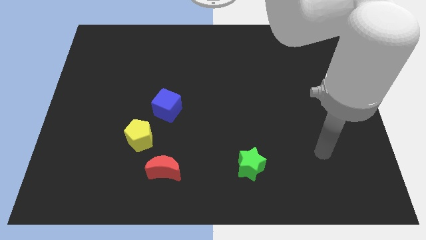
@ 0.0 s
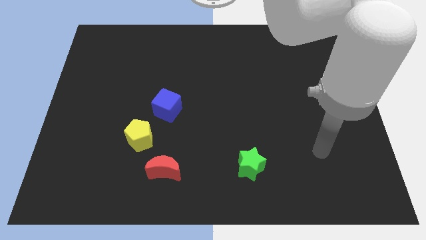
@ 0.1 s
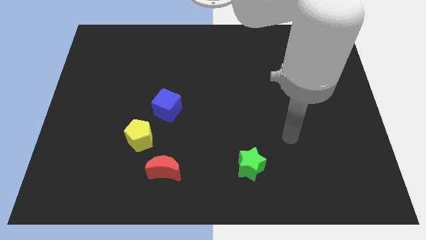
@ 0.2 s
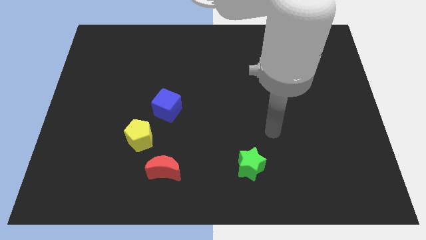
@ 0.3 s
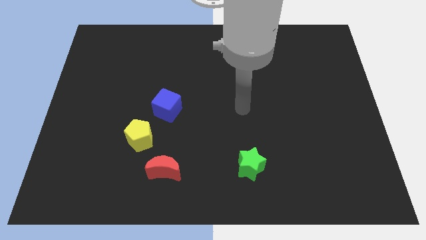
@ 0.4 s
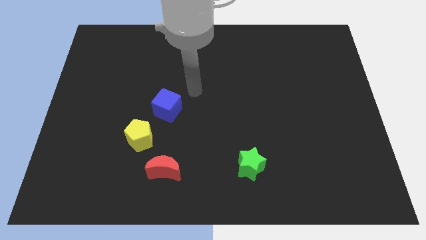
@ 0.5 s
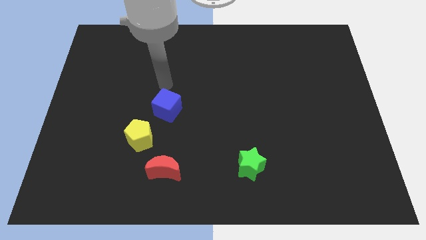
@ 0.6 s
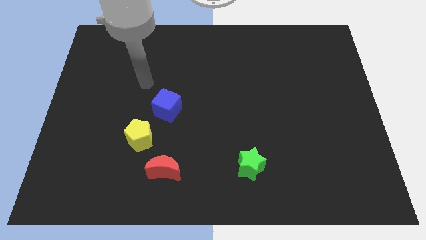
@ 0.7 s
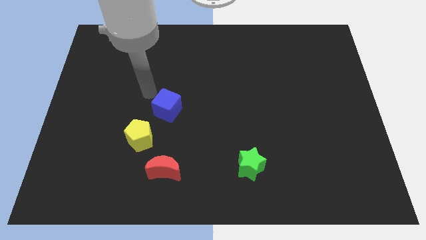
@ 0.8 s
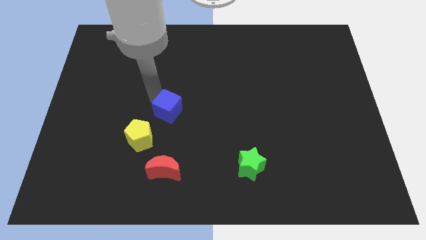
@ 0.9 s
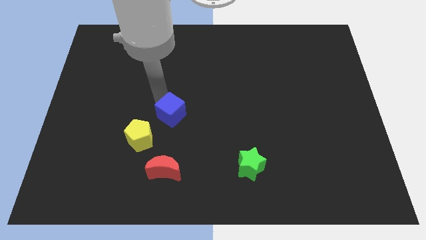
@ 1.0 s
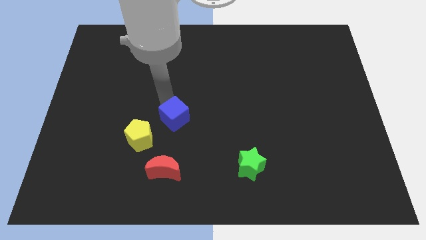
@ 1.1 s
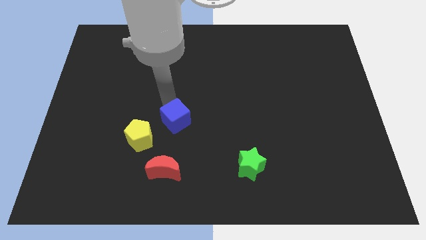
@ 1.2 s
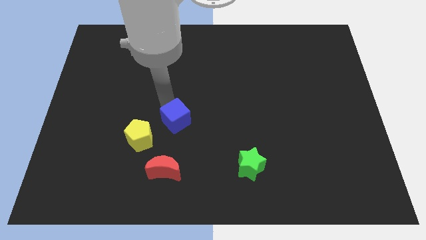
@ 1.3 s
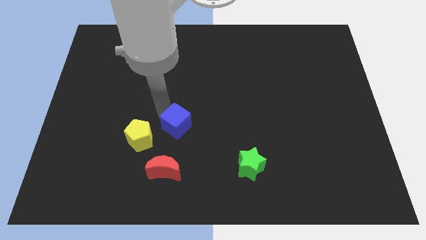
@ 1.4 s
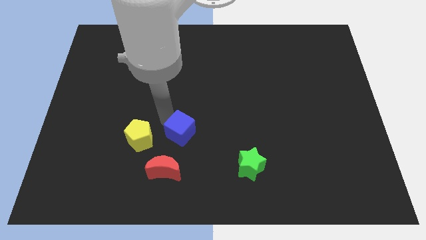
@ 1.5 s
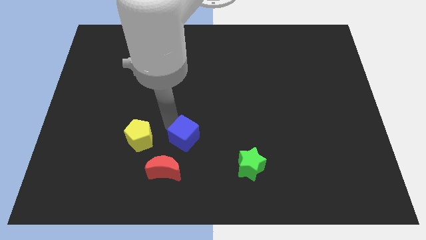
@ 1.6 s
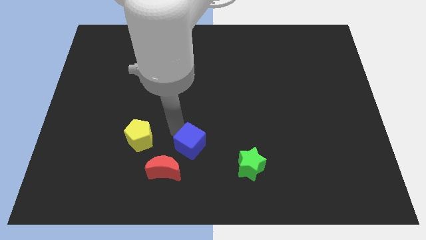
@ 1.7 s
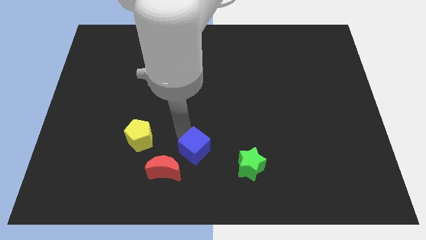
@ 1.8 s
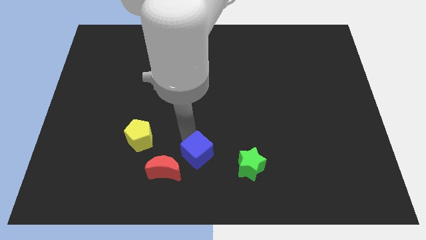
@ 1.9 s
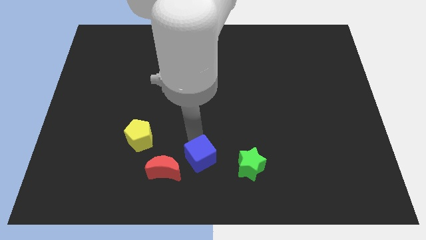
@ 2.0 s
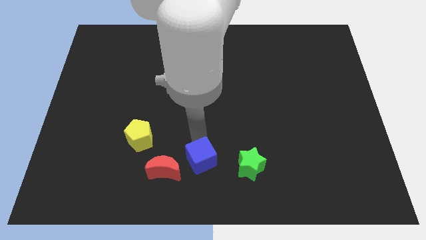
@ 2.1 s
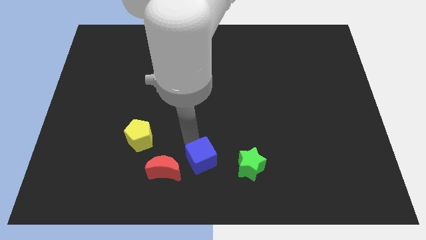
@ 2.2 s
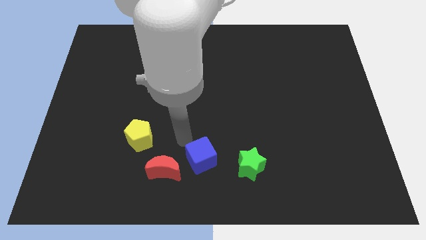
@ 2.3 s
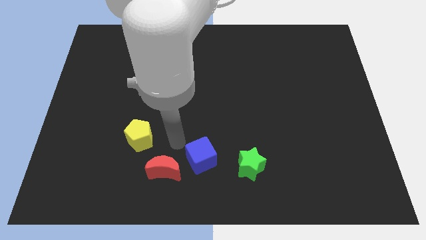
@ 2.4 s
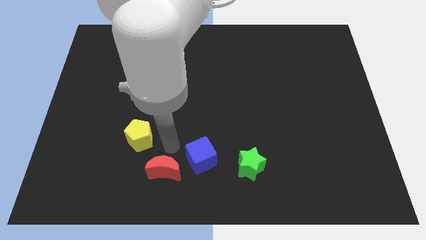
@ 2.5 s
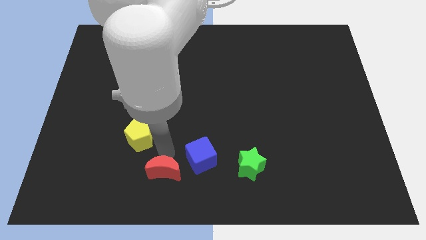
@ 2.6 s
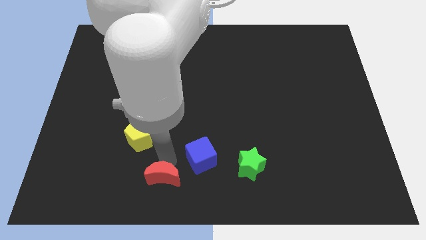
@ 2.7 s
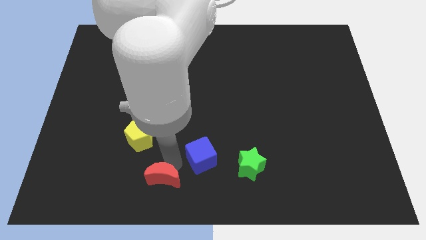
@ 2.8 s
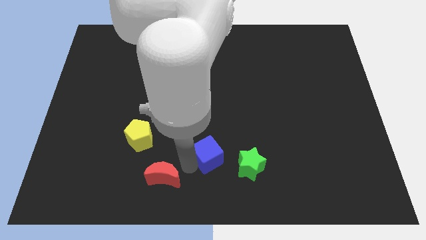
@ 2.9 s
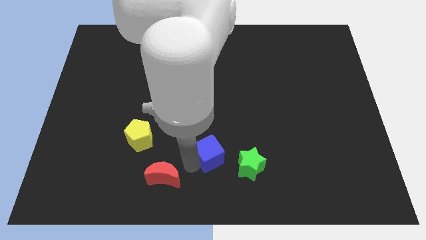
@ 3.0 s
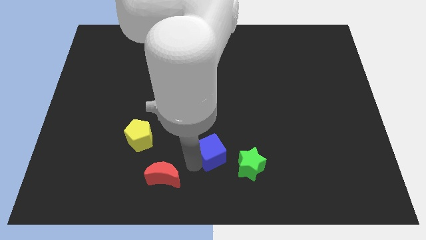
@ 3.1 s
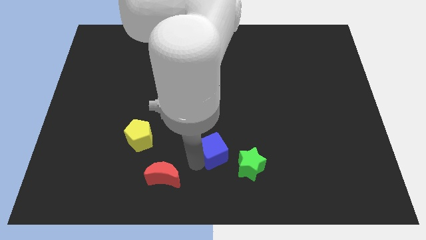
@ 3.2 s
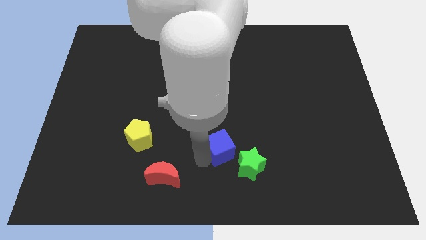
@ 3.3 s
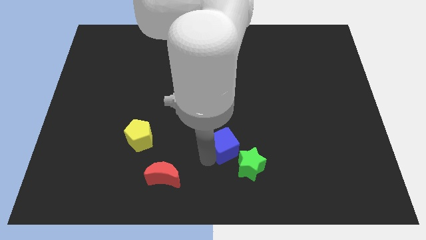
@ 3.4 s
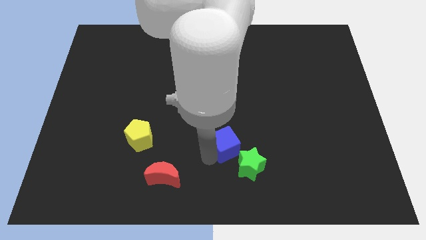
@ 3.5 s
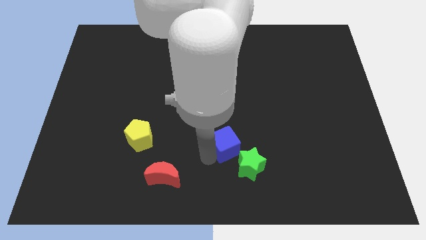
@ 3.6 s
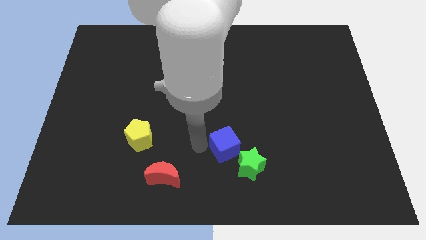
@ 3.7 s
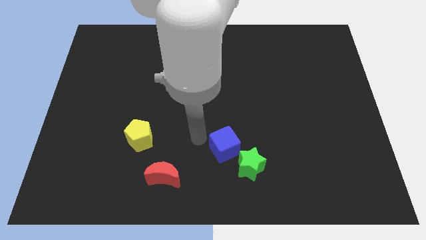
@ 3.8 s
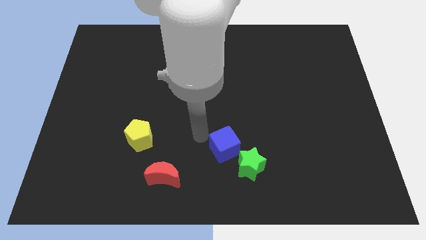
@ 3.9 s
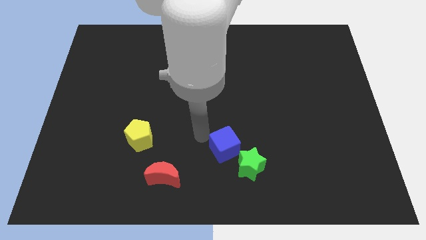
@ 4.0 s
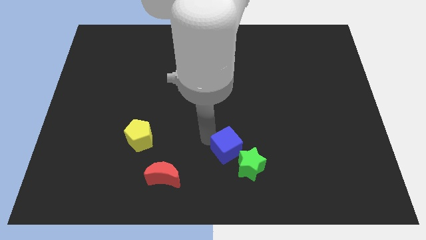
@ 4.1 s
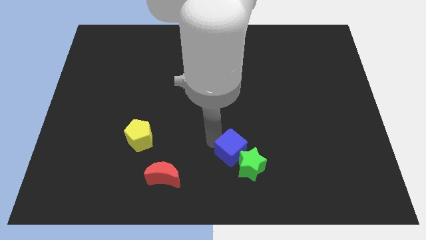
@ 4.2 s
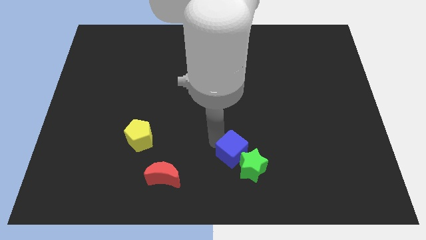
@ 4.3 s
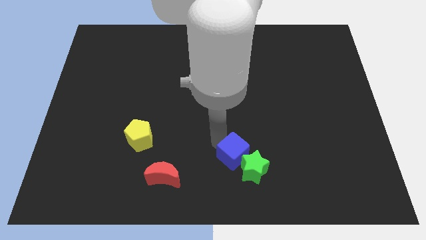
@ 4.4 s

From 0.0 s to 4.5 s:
push the cube close to the star

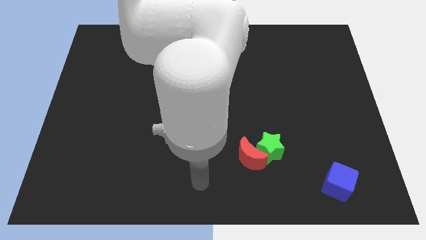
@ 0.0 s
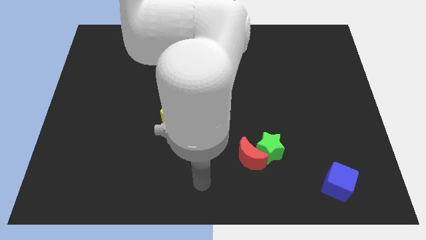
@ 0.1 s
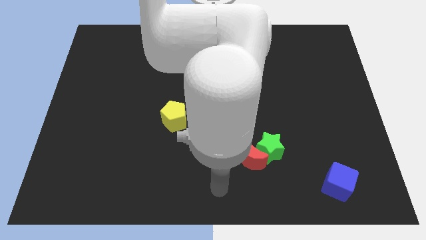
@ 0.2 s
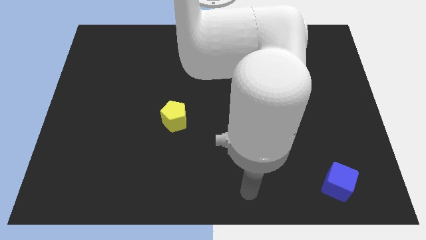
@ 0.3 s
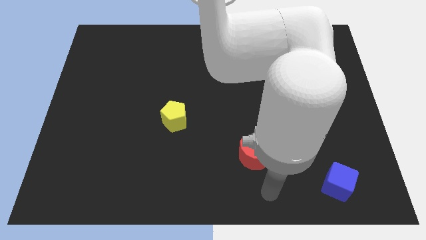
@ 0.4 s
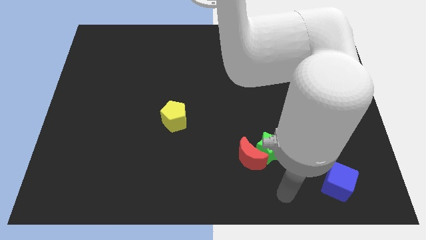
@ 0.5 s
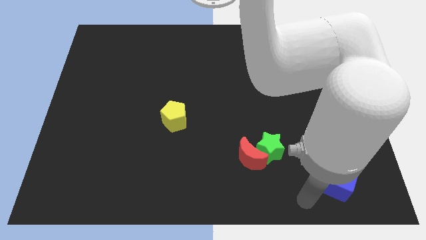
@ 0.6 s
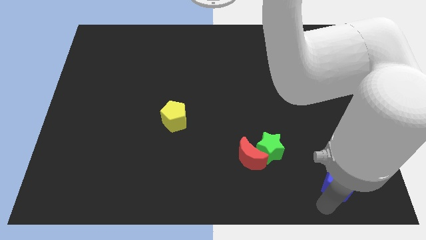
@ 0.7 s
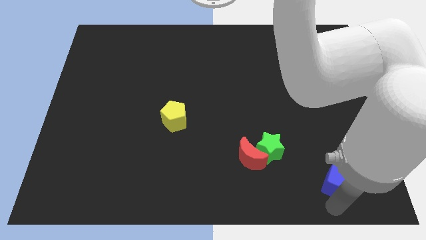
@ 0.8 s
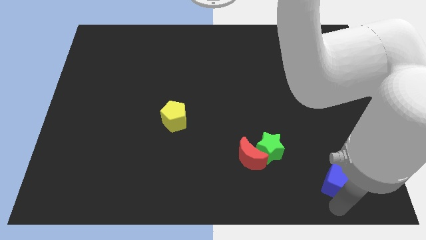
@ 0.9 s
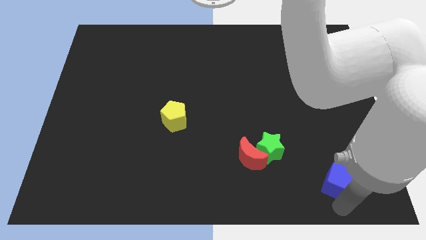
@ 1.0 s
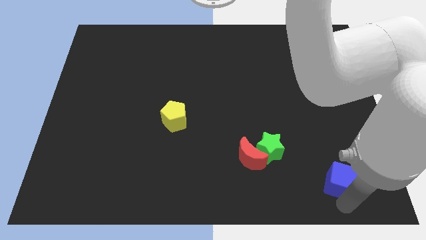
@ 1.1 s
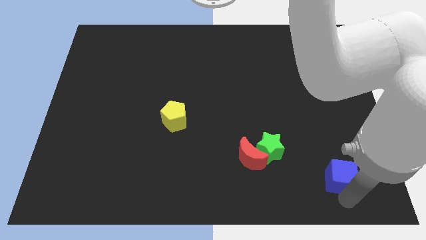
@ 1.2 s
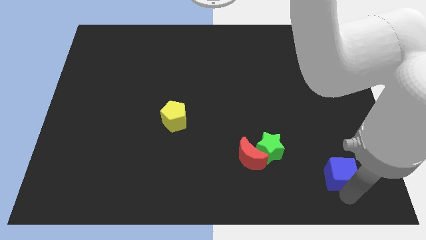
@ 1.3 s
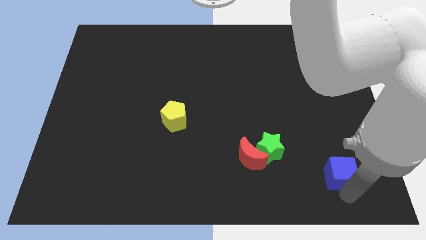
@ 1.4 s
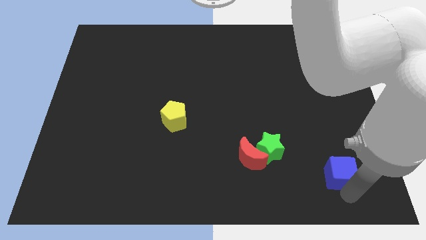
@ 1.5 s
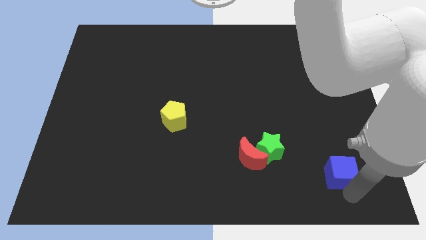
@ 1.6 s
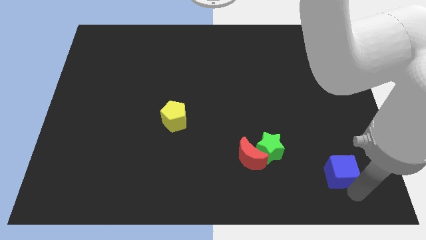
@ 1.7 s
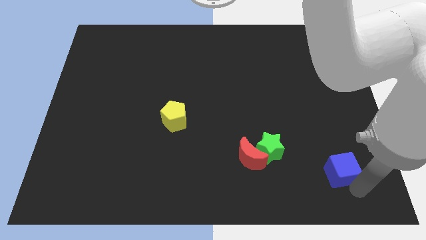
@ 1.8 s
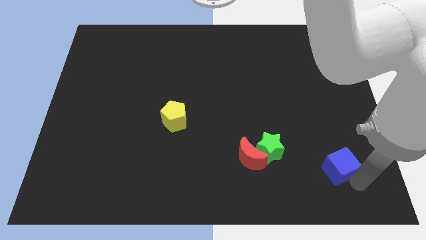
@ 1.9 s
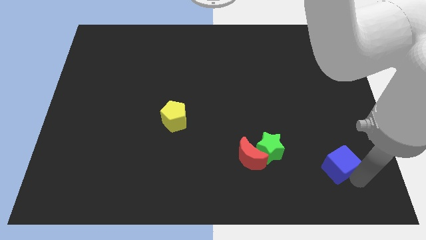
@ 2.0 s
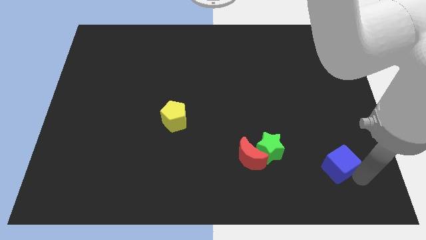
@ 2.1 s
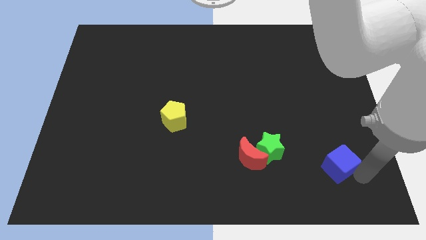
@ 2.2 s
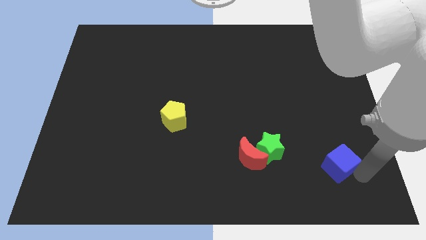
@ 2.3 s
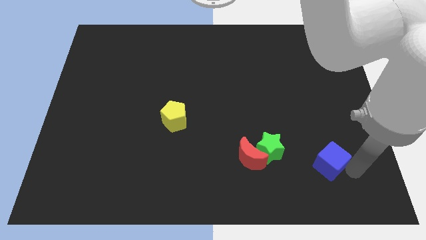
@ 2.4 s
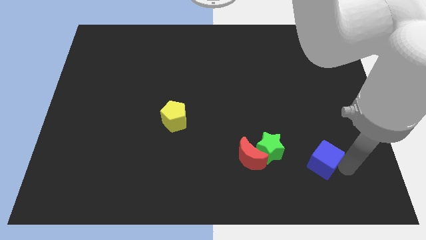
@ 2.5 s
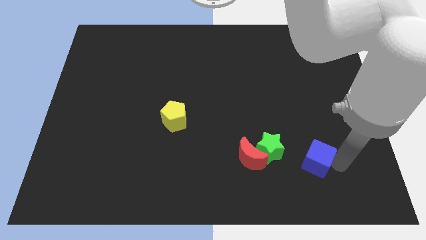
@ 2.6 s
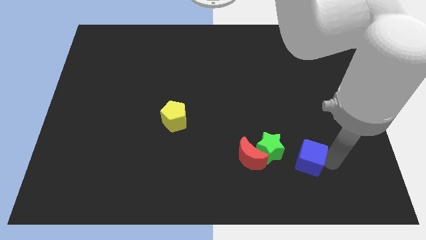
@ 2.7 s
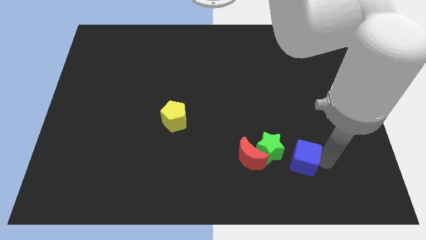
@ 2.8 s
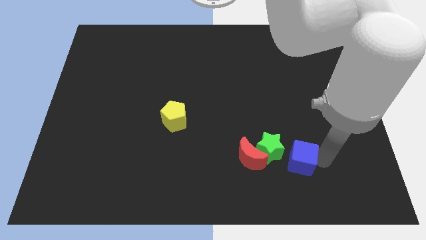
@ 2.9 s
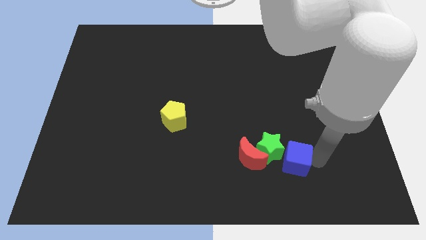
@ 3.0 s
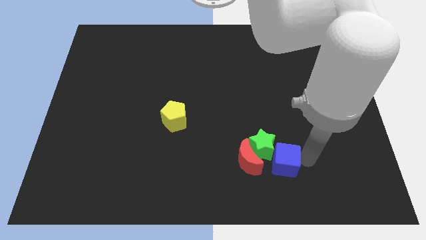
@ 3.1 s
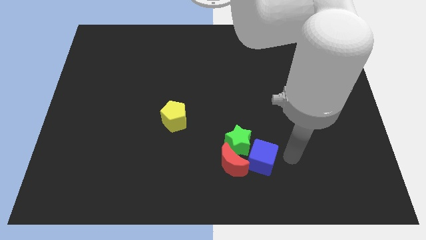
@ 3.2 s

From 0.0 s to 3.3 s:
slide the blue block towards the green star

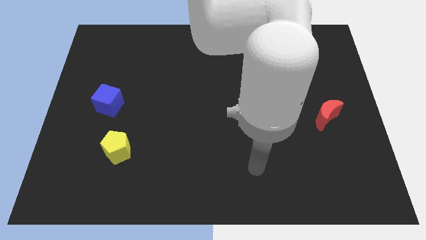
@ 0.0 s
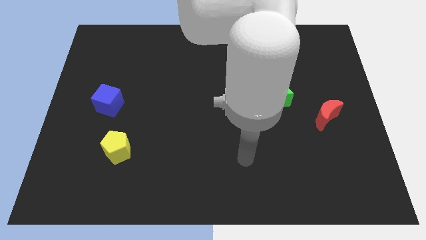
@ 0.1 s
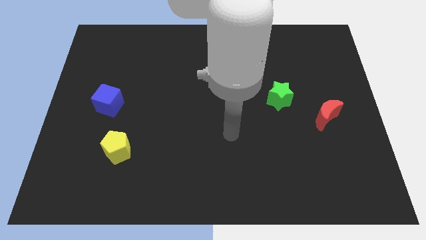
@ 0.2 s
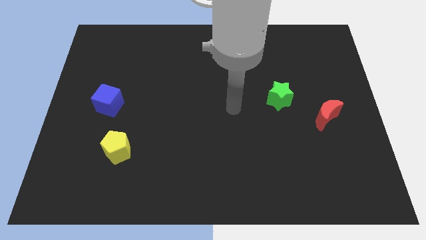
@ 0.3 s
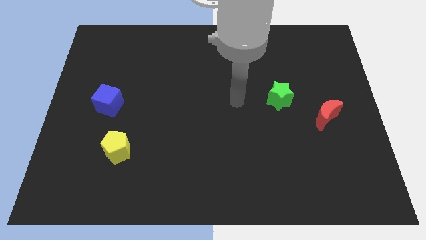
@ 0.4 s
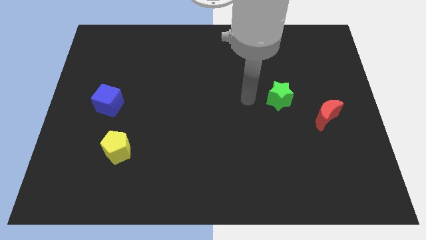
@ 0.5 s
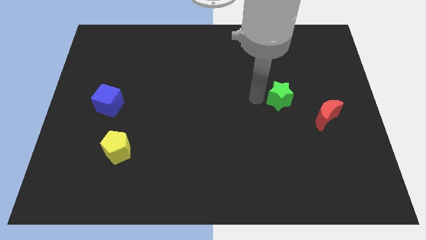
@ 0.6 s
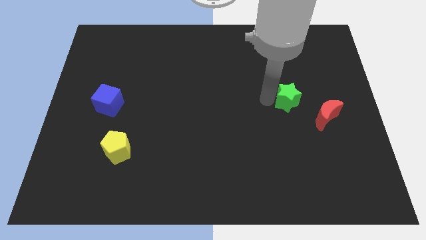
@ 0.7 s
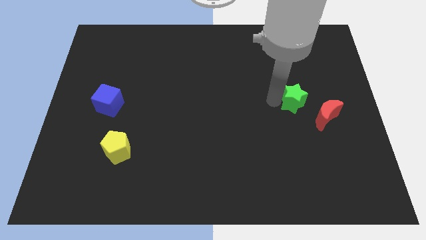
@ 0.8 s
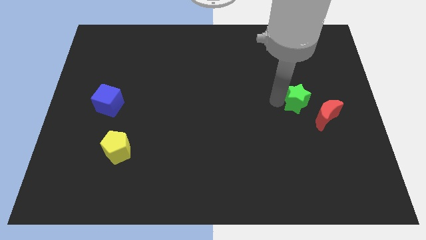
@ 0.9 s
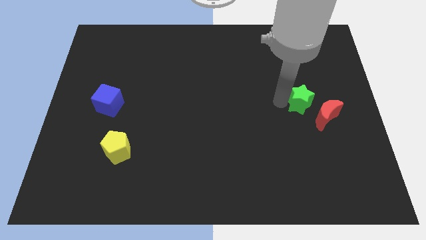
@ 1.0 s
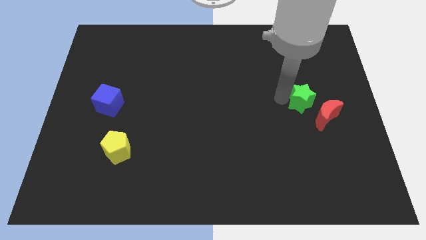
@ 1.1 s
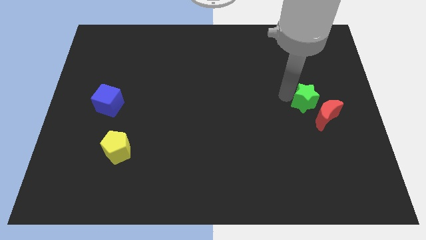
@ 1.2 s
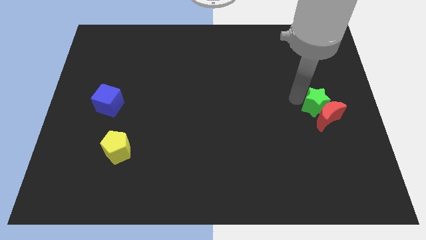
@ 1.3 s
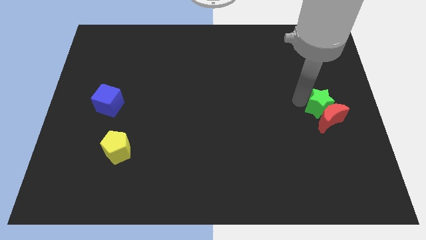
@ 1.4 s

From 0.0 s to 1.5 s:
move the green star towards the moon
